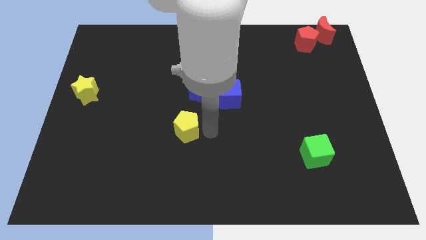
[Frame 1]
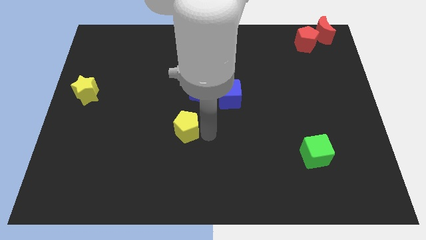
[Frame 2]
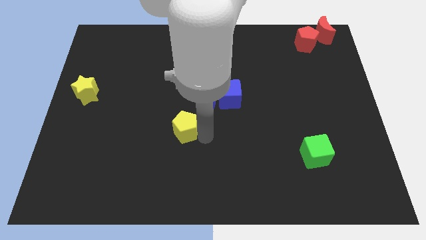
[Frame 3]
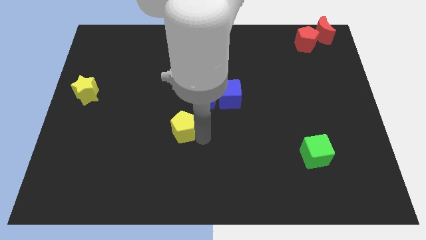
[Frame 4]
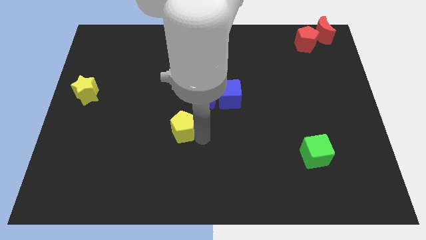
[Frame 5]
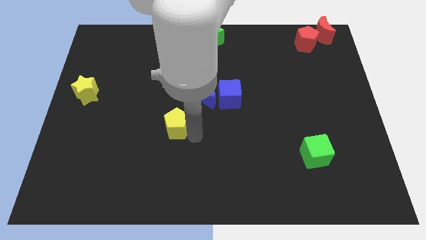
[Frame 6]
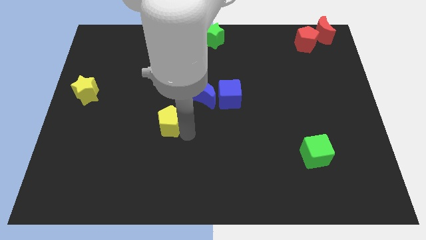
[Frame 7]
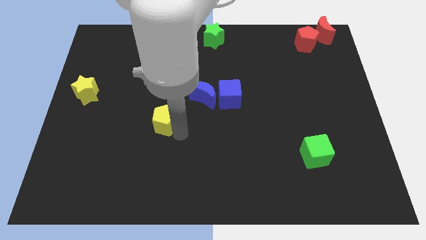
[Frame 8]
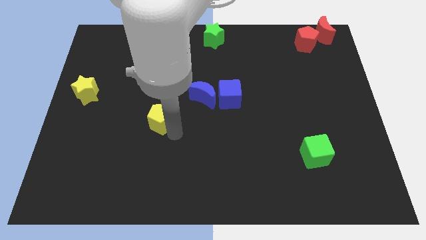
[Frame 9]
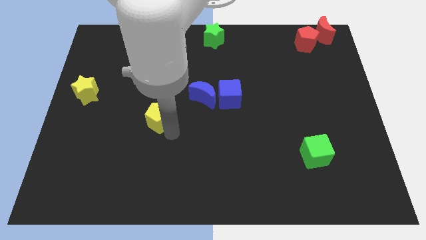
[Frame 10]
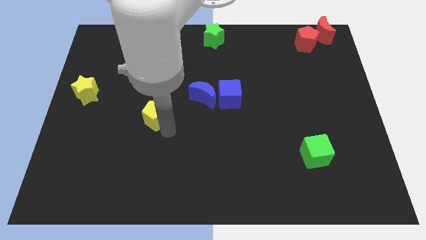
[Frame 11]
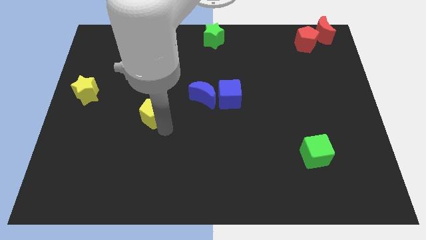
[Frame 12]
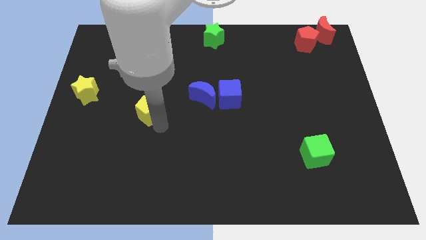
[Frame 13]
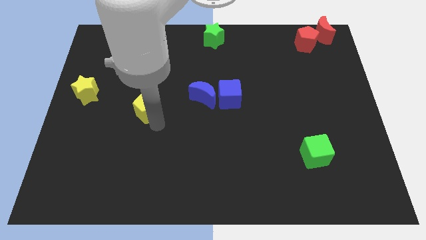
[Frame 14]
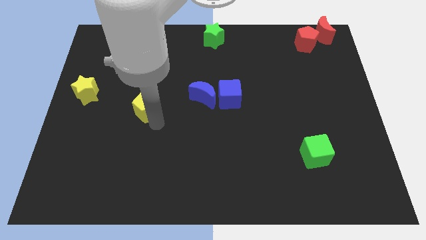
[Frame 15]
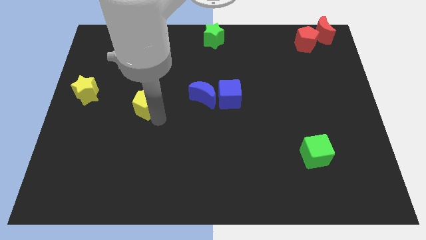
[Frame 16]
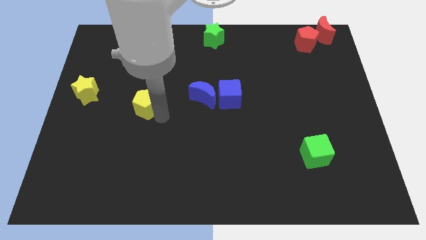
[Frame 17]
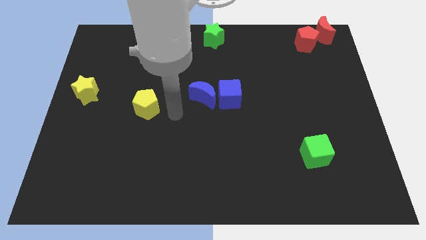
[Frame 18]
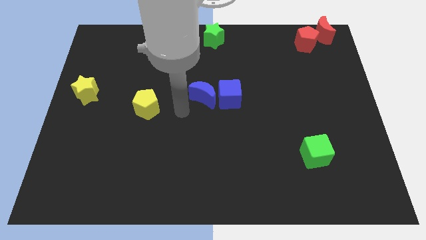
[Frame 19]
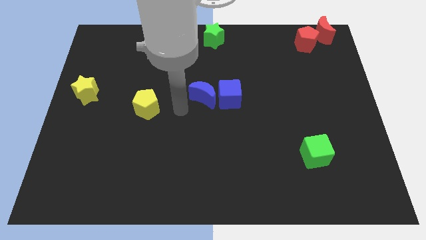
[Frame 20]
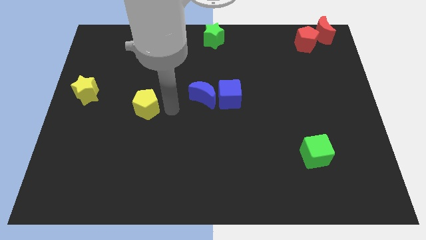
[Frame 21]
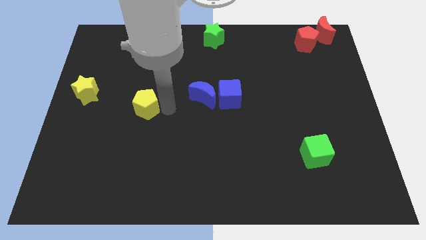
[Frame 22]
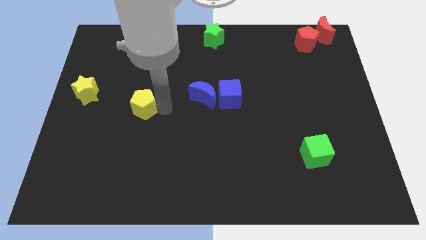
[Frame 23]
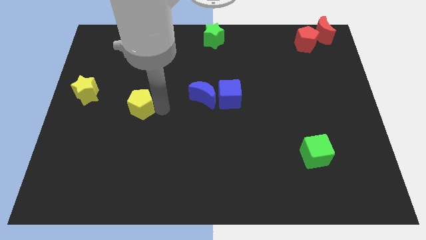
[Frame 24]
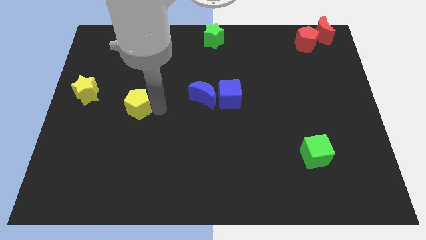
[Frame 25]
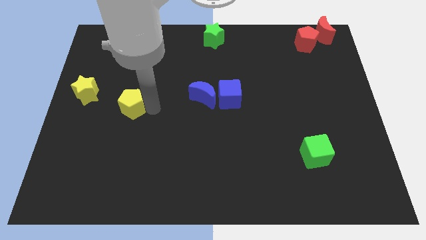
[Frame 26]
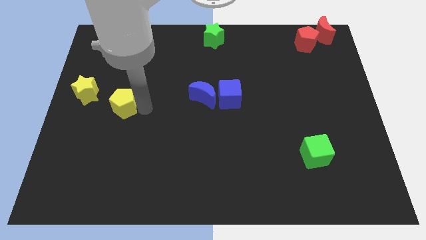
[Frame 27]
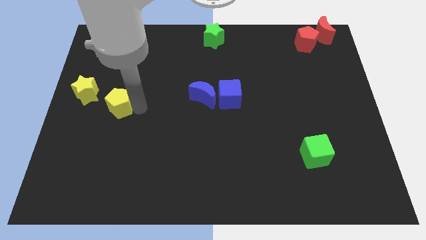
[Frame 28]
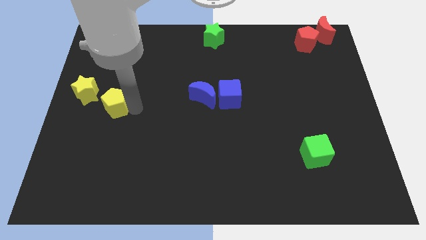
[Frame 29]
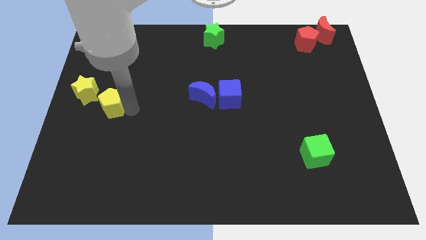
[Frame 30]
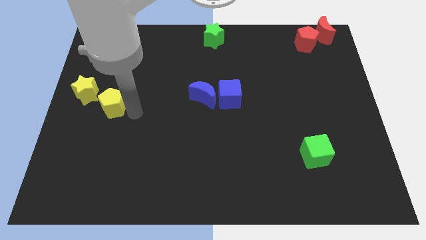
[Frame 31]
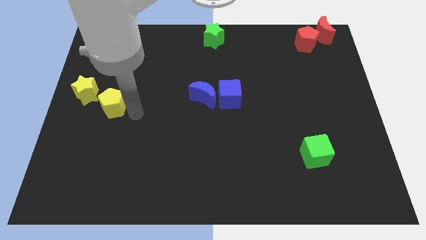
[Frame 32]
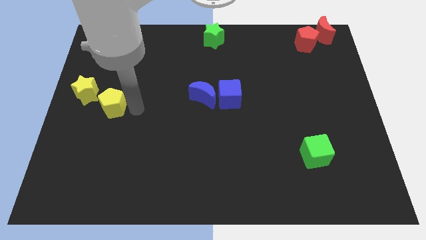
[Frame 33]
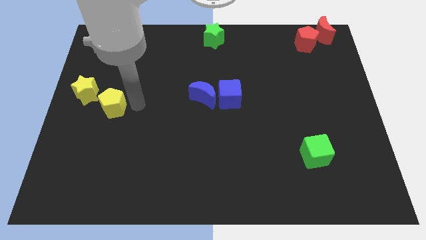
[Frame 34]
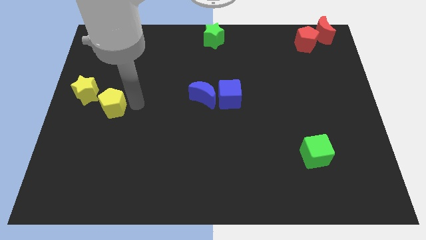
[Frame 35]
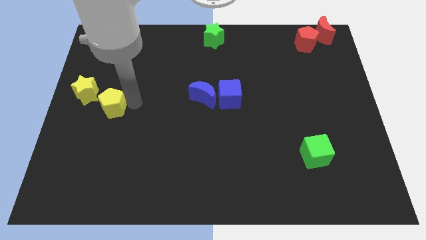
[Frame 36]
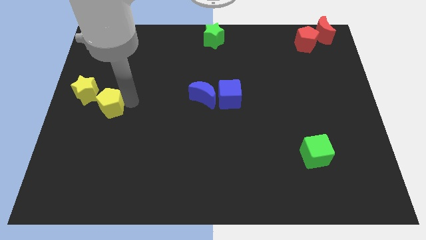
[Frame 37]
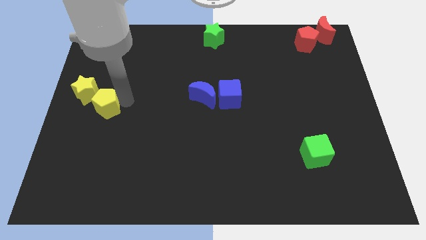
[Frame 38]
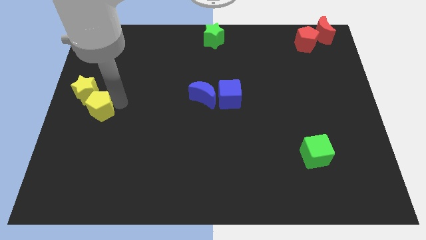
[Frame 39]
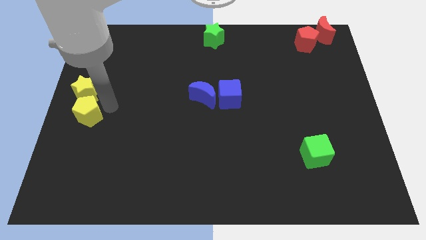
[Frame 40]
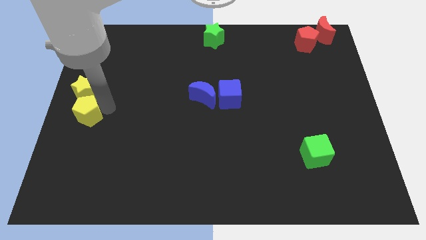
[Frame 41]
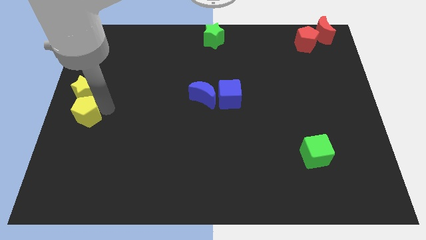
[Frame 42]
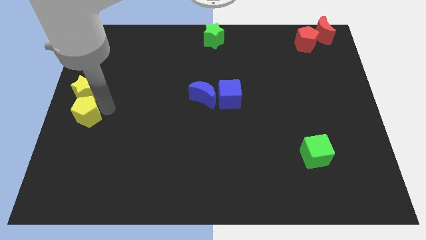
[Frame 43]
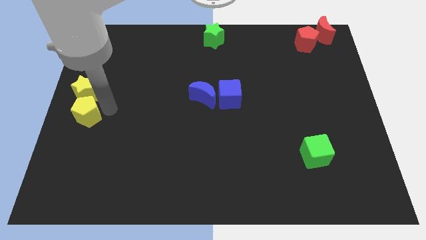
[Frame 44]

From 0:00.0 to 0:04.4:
move the yellow pentagon down to the yellow star

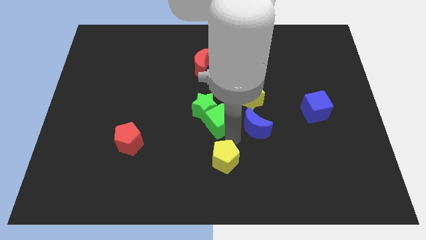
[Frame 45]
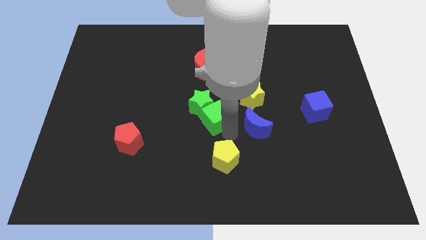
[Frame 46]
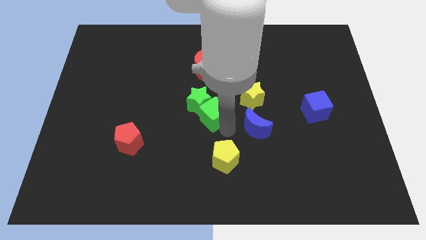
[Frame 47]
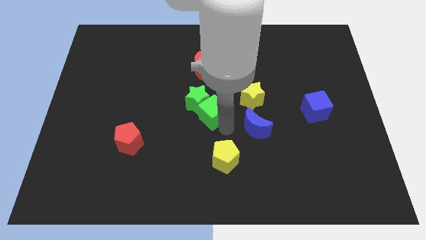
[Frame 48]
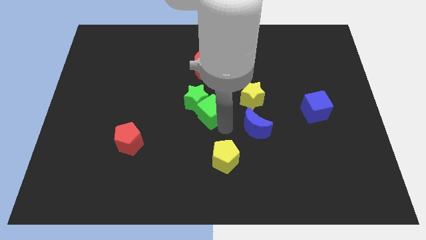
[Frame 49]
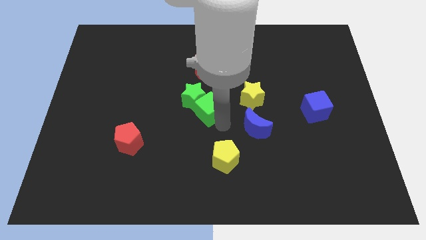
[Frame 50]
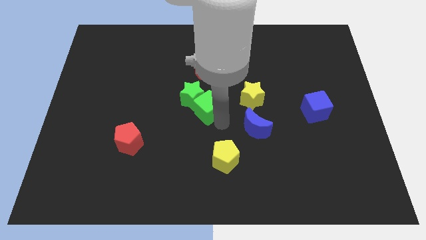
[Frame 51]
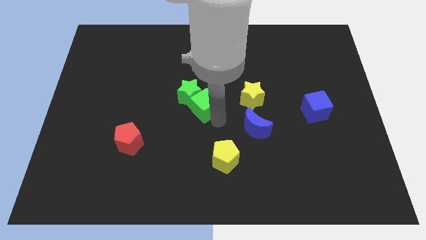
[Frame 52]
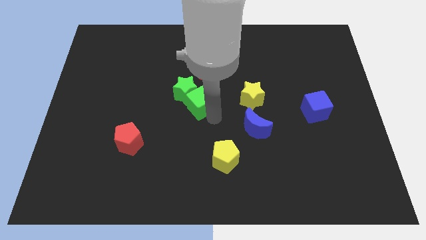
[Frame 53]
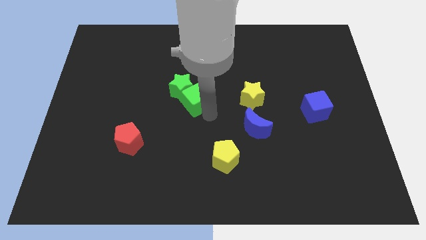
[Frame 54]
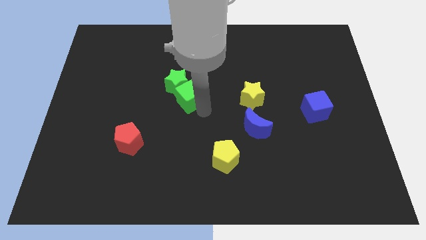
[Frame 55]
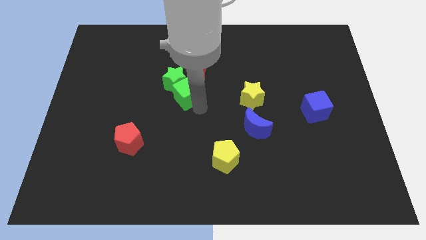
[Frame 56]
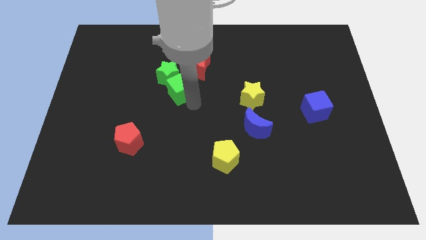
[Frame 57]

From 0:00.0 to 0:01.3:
put the group of green blocks between the red moon and red pentagon

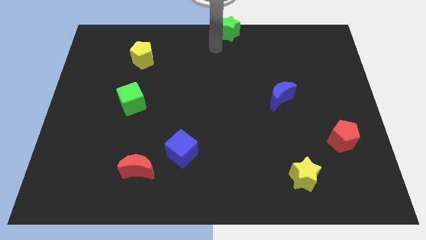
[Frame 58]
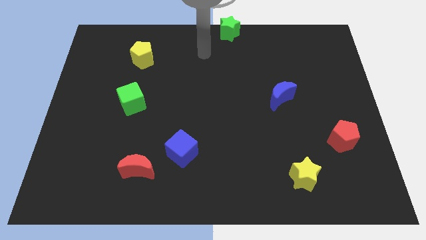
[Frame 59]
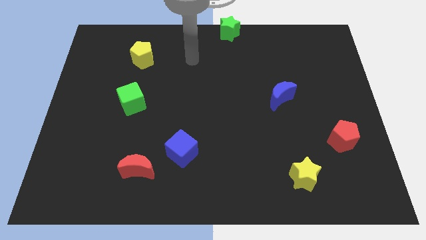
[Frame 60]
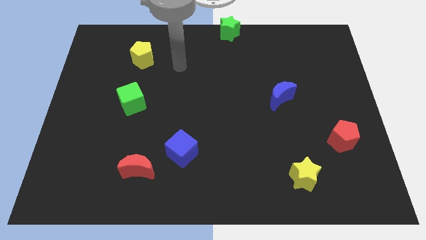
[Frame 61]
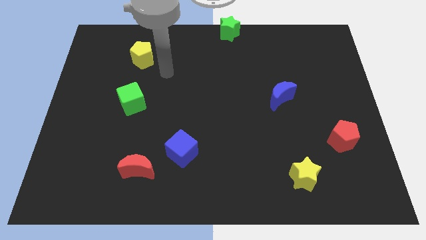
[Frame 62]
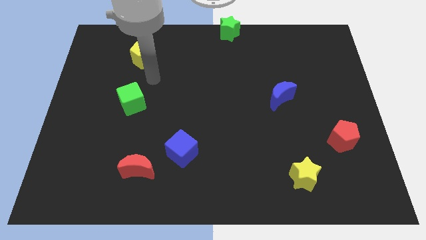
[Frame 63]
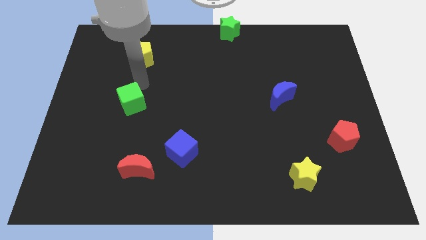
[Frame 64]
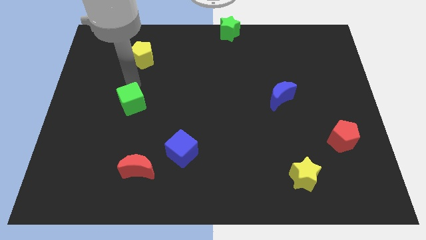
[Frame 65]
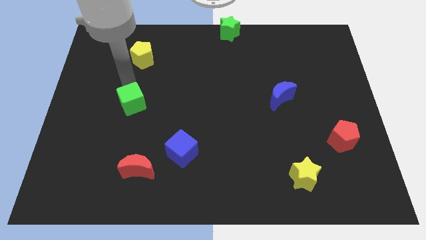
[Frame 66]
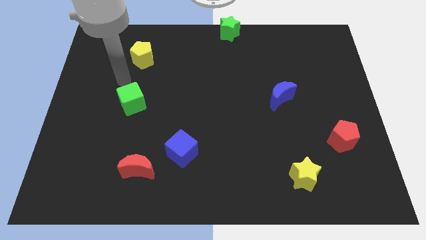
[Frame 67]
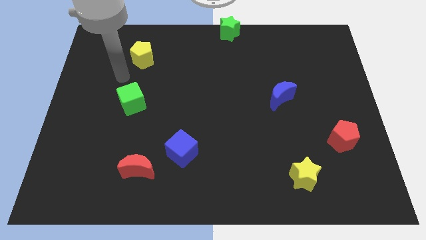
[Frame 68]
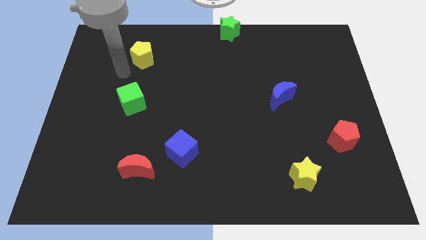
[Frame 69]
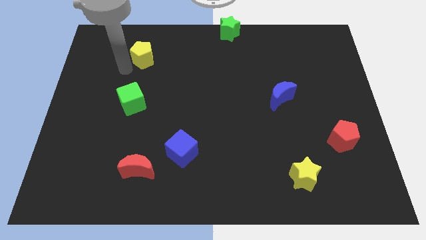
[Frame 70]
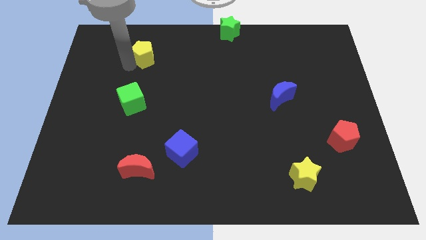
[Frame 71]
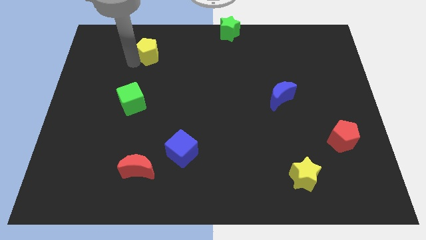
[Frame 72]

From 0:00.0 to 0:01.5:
tap the yellow pentagon

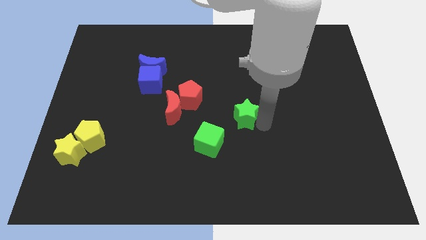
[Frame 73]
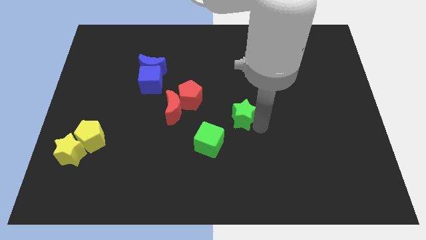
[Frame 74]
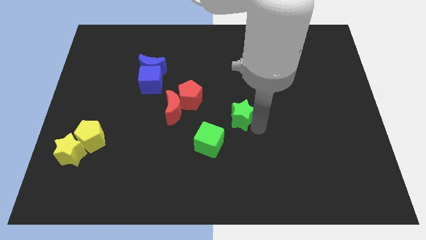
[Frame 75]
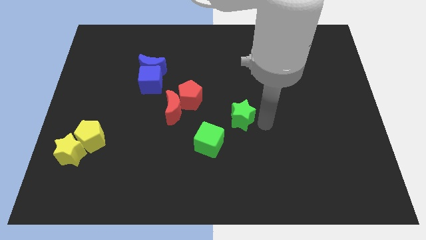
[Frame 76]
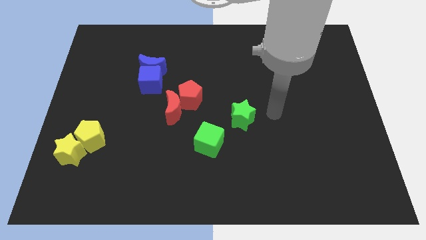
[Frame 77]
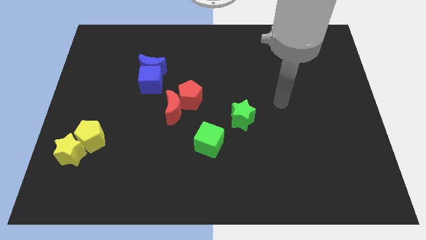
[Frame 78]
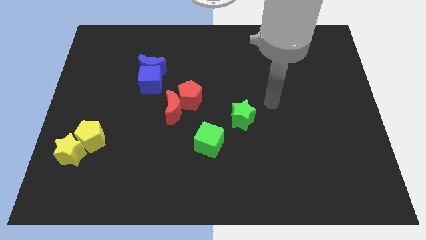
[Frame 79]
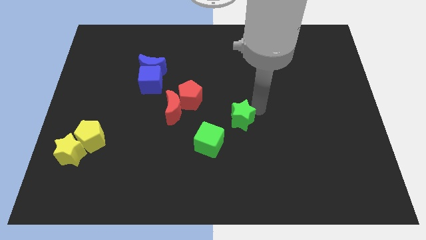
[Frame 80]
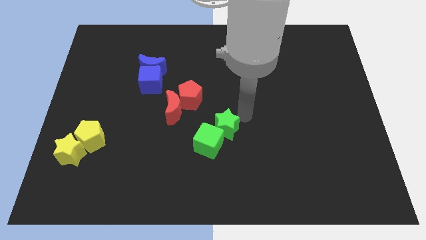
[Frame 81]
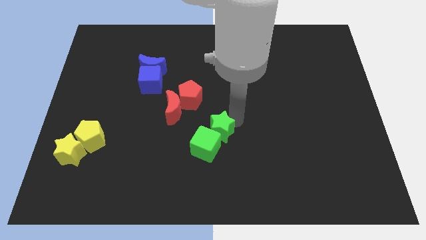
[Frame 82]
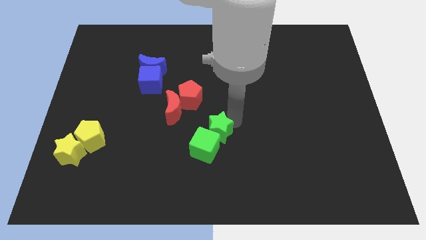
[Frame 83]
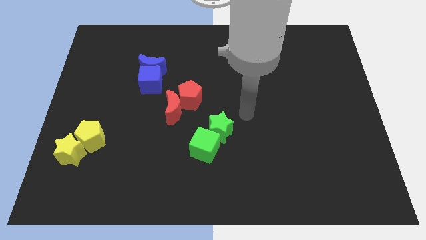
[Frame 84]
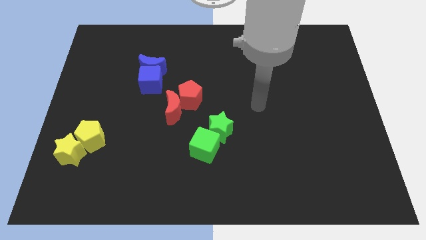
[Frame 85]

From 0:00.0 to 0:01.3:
plac ethe green star on the top right of the green cube

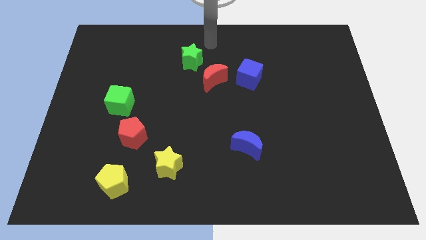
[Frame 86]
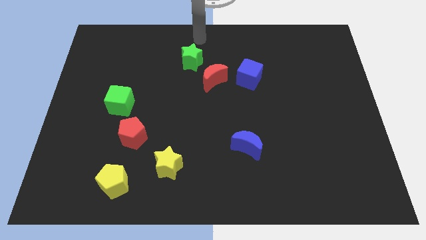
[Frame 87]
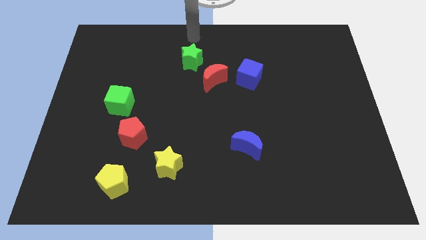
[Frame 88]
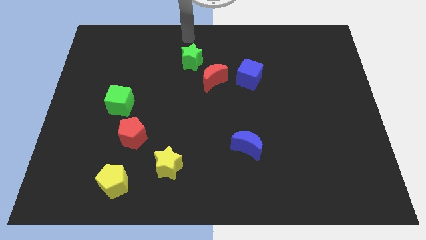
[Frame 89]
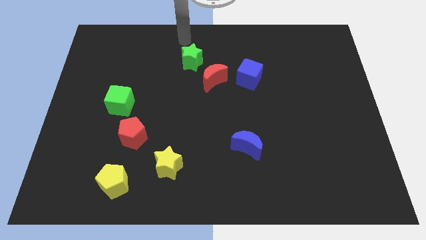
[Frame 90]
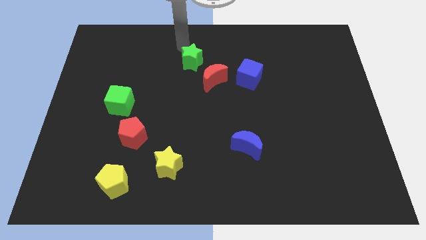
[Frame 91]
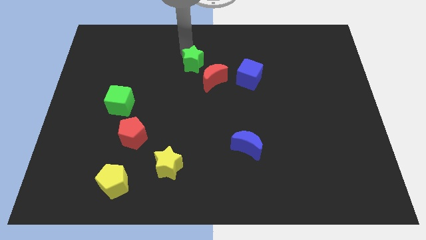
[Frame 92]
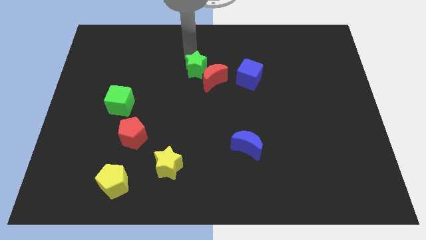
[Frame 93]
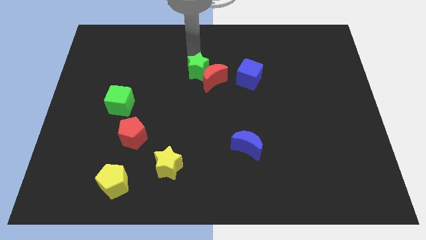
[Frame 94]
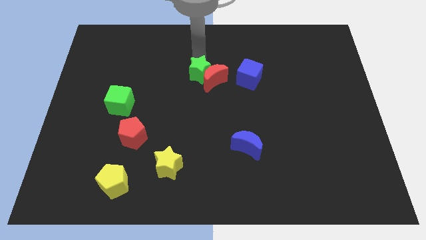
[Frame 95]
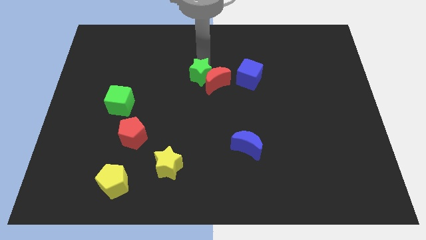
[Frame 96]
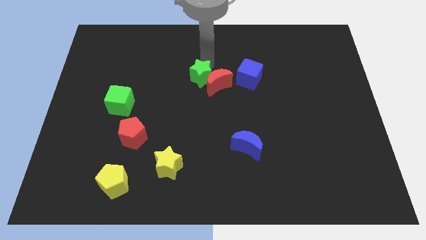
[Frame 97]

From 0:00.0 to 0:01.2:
push the green star into the red crescent
